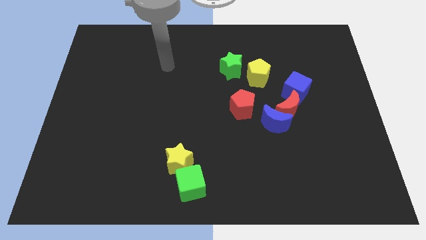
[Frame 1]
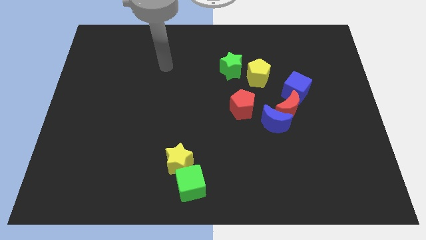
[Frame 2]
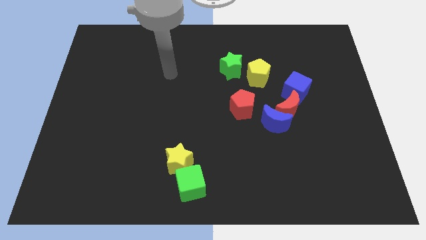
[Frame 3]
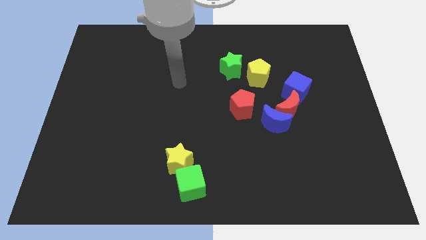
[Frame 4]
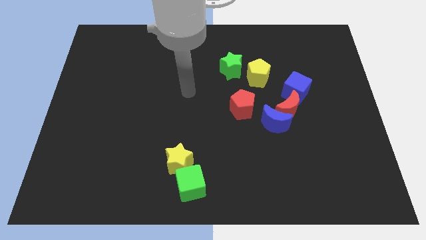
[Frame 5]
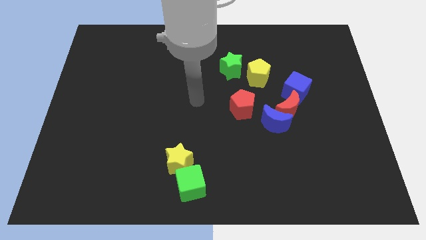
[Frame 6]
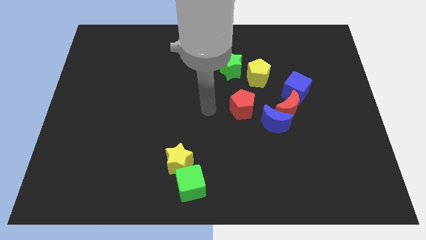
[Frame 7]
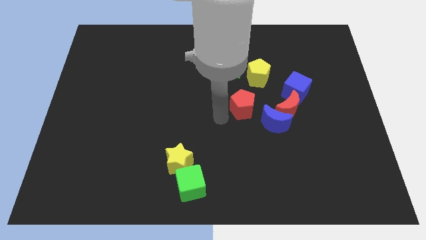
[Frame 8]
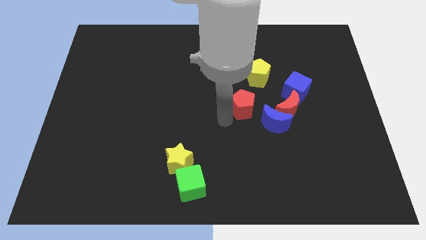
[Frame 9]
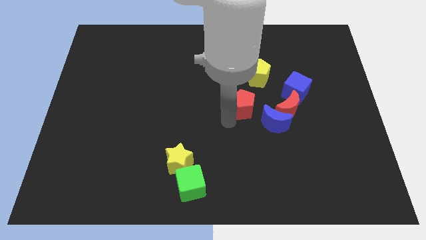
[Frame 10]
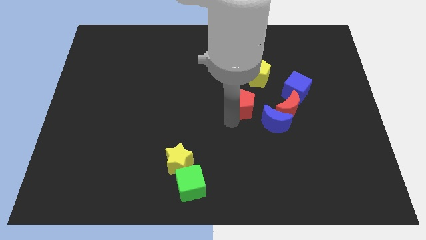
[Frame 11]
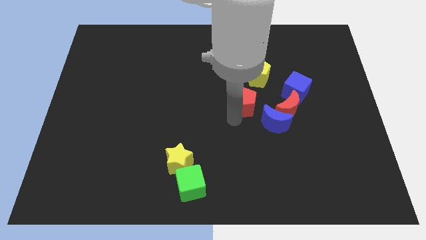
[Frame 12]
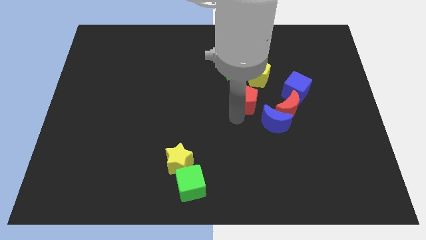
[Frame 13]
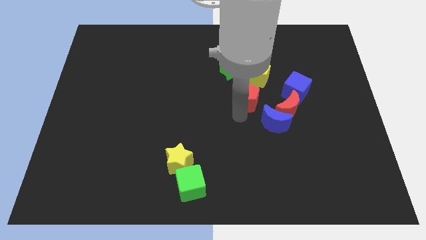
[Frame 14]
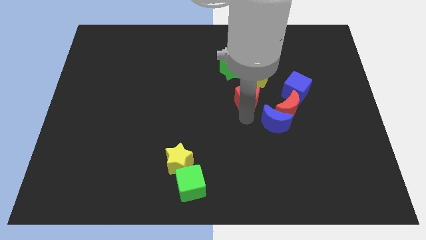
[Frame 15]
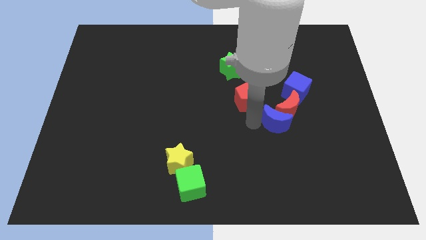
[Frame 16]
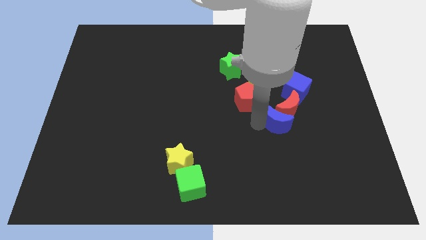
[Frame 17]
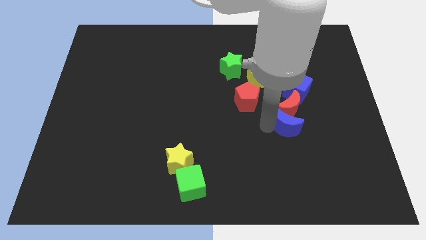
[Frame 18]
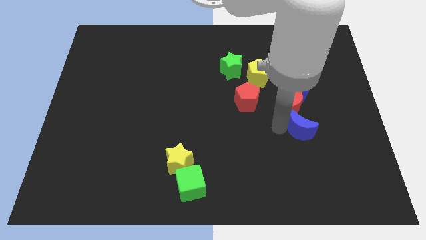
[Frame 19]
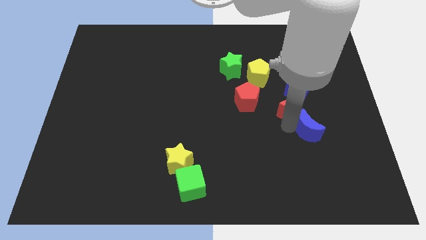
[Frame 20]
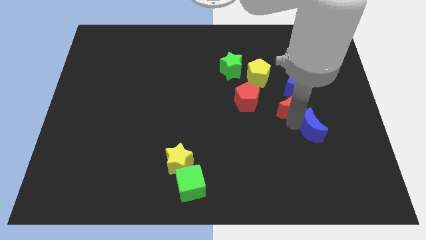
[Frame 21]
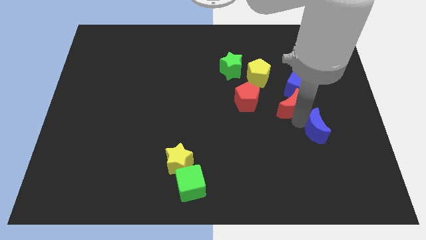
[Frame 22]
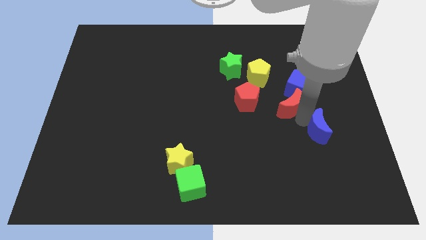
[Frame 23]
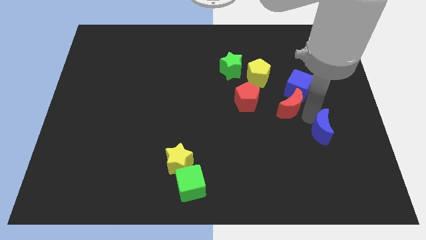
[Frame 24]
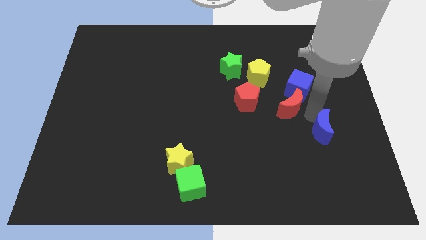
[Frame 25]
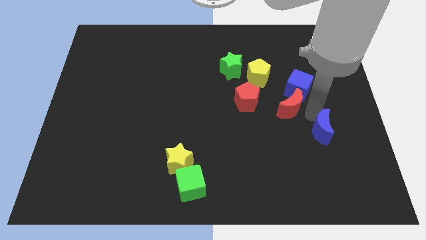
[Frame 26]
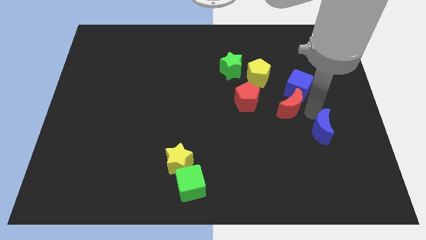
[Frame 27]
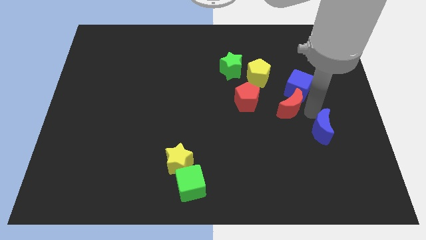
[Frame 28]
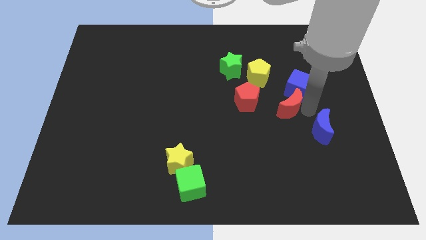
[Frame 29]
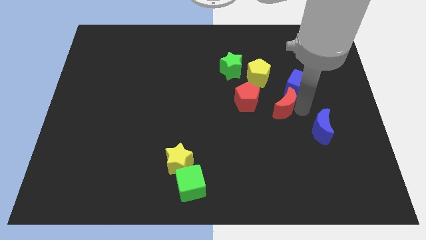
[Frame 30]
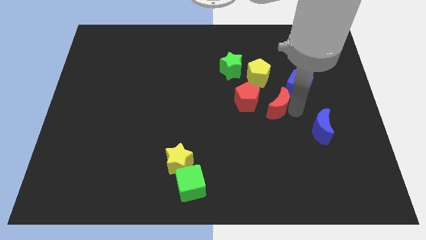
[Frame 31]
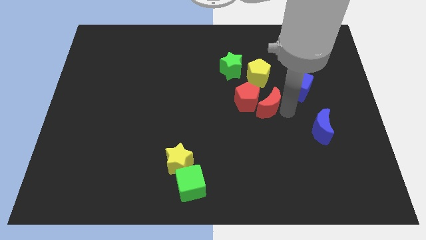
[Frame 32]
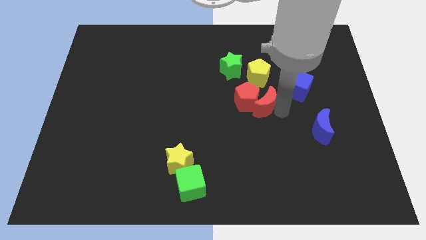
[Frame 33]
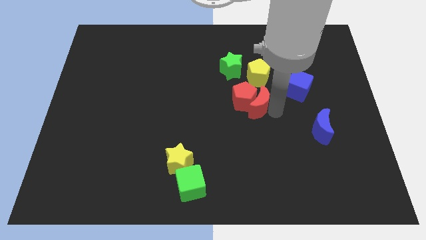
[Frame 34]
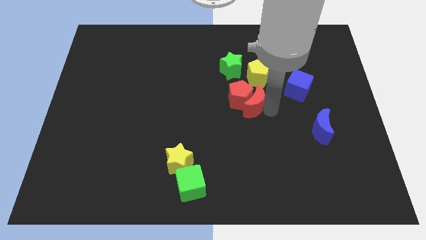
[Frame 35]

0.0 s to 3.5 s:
separate the red moon and blue moon

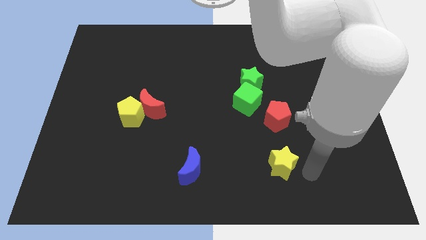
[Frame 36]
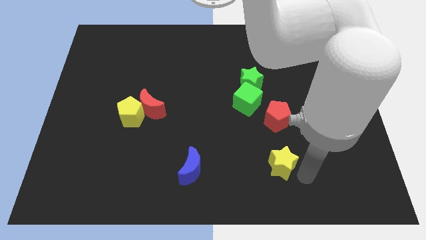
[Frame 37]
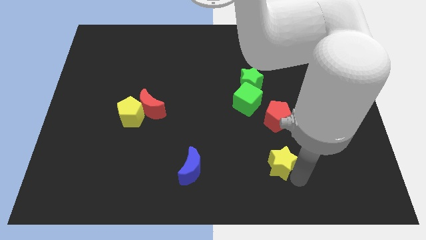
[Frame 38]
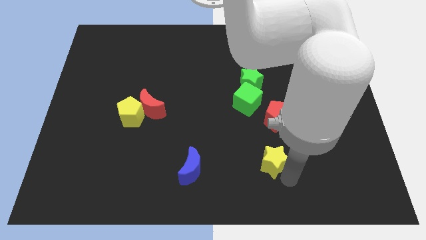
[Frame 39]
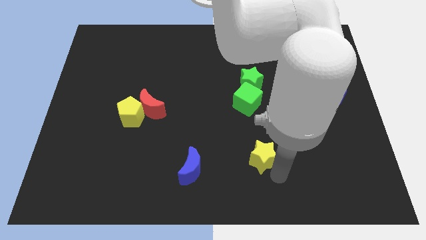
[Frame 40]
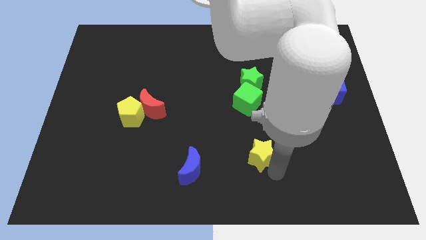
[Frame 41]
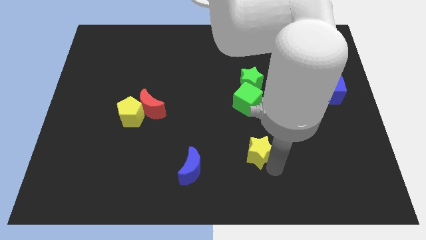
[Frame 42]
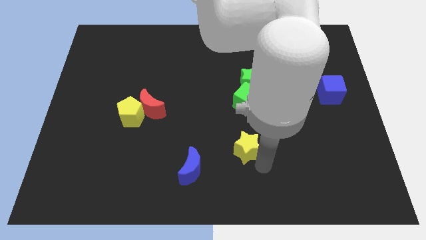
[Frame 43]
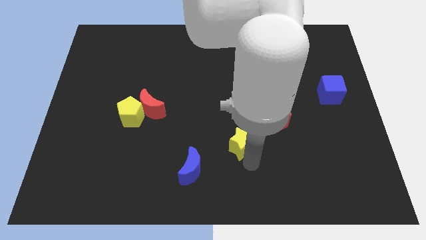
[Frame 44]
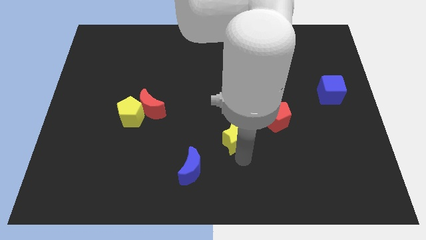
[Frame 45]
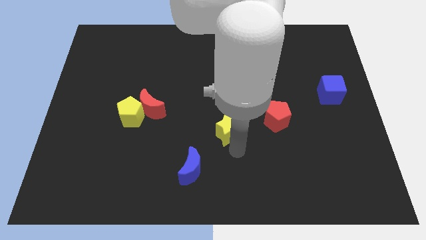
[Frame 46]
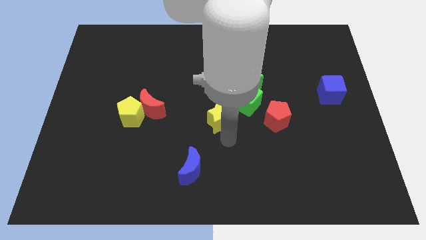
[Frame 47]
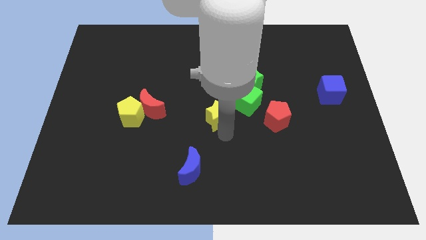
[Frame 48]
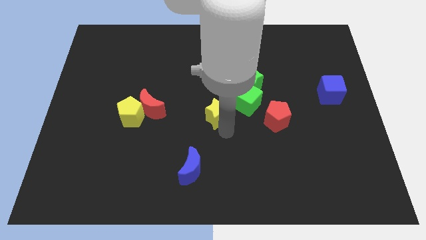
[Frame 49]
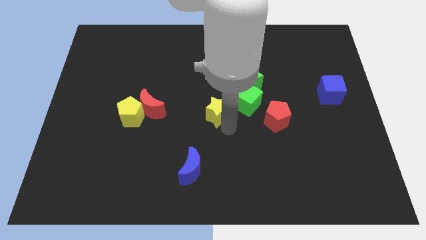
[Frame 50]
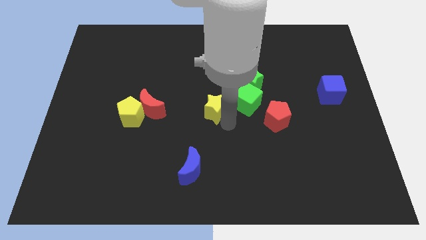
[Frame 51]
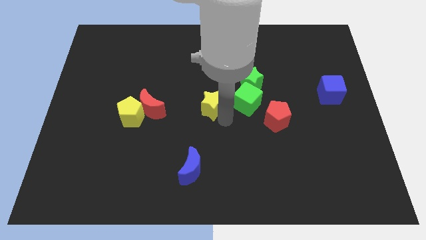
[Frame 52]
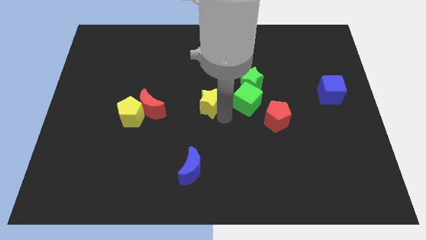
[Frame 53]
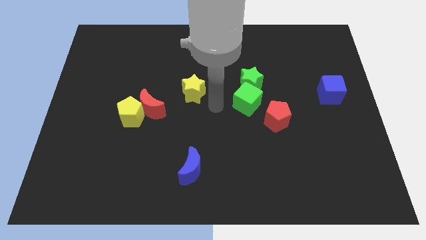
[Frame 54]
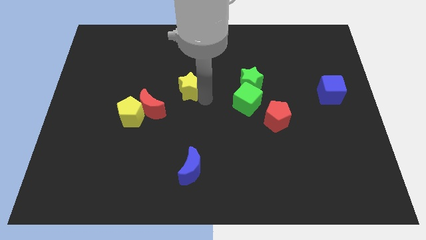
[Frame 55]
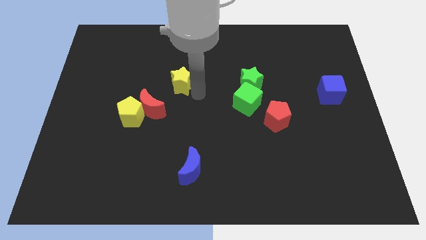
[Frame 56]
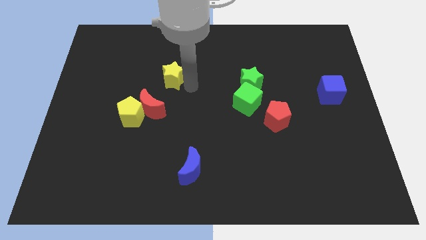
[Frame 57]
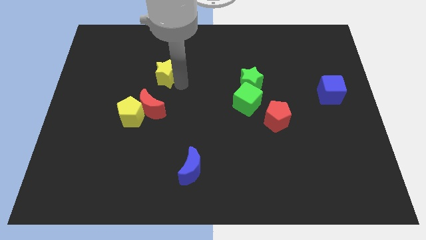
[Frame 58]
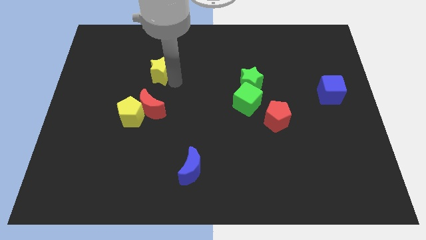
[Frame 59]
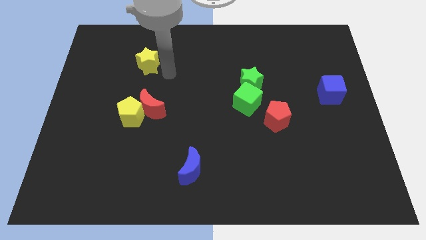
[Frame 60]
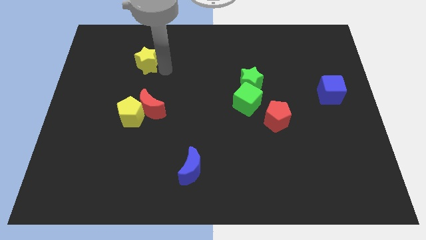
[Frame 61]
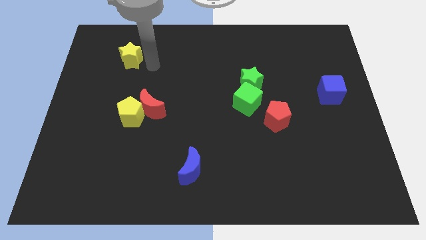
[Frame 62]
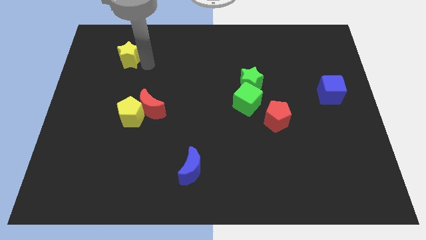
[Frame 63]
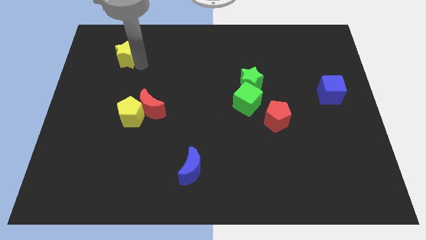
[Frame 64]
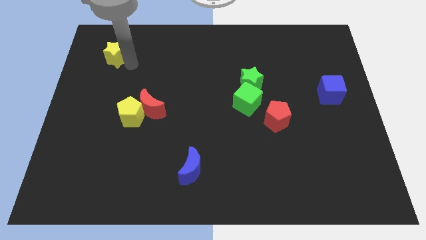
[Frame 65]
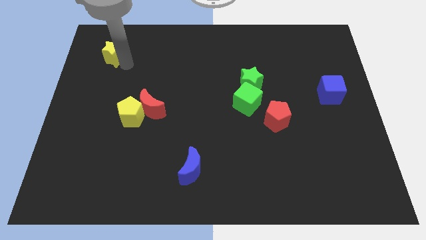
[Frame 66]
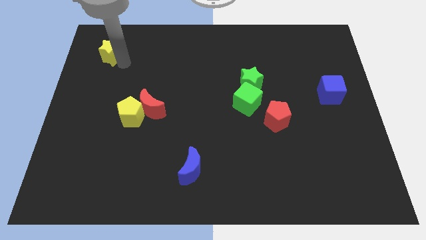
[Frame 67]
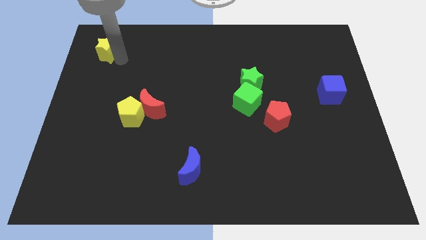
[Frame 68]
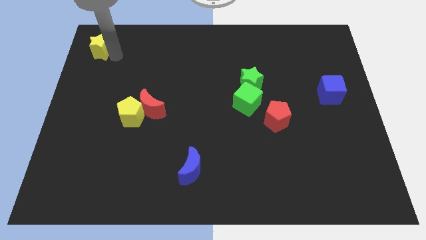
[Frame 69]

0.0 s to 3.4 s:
move the yellow star to the top left of the board

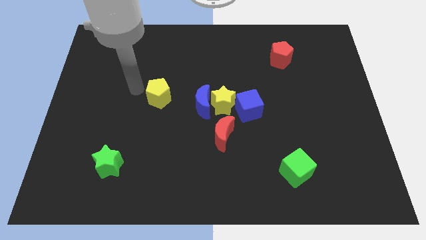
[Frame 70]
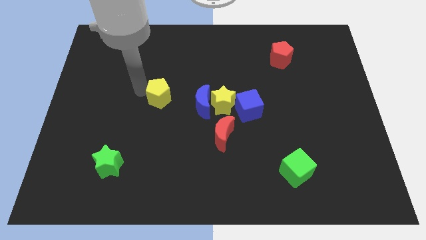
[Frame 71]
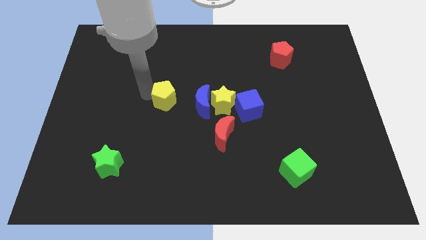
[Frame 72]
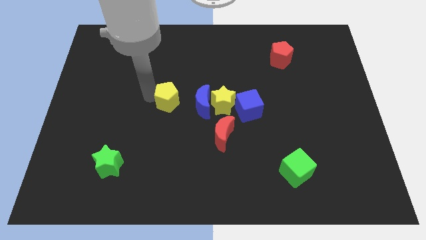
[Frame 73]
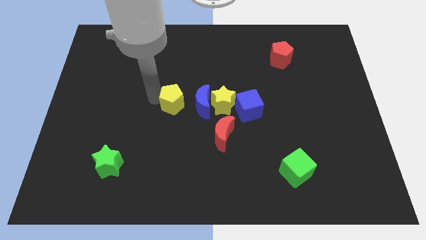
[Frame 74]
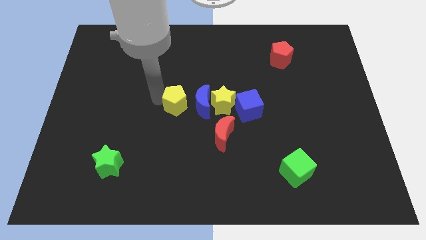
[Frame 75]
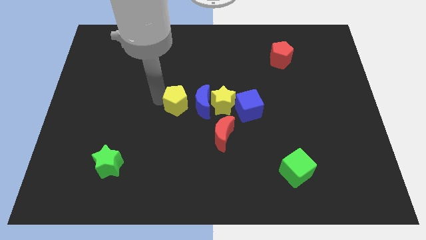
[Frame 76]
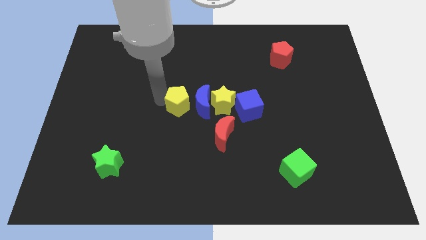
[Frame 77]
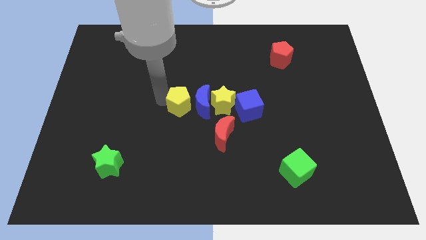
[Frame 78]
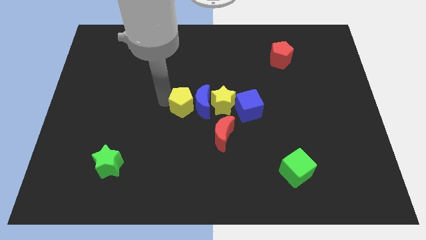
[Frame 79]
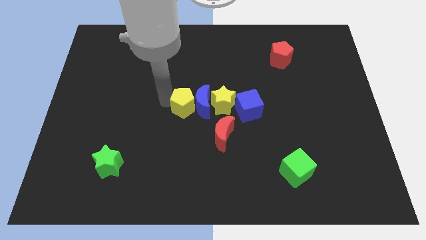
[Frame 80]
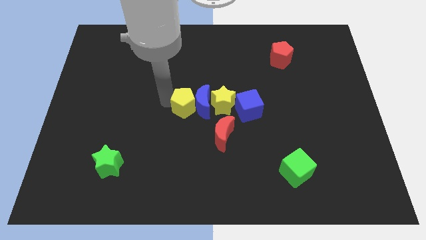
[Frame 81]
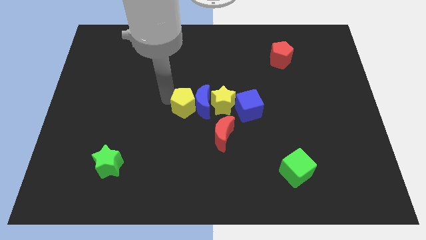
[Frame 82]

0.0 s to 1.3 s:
make the yellow pentagon to touch the blue crescent

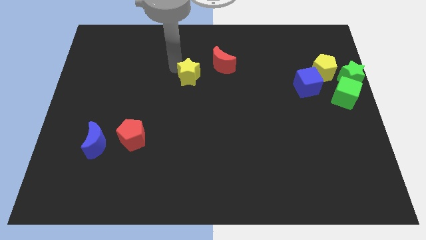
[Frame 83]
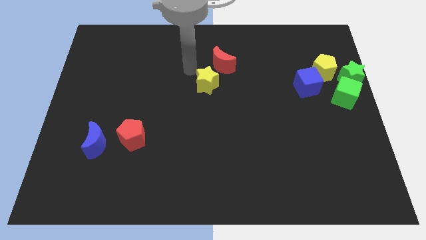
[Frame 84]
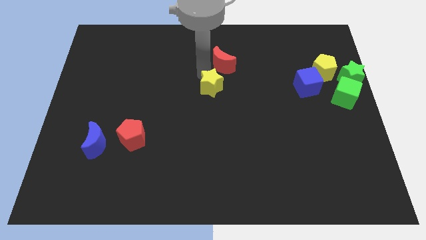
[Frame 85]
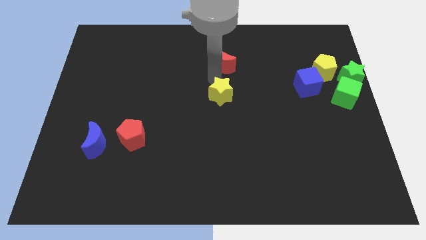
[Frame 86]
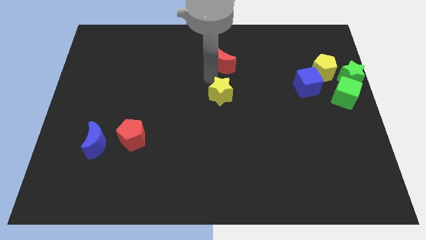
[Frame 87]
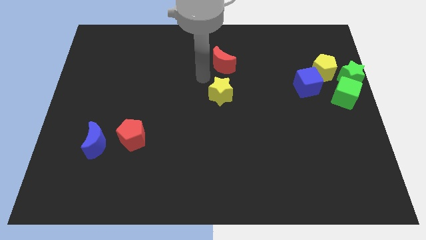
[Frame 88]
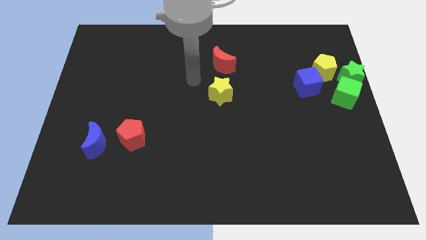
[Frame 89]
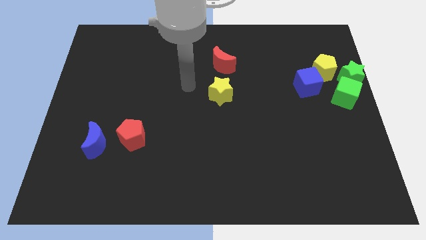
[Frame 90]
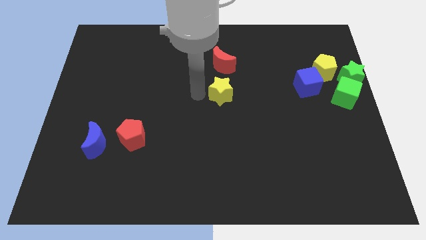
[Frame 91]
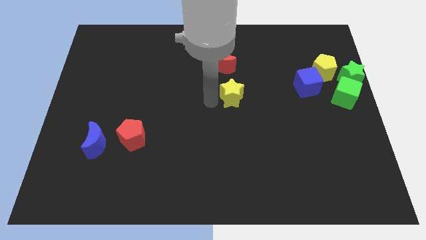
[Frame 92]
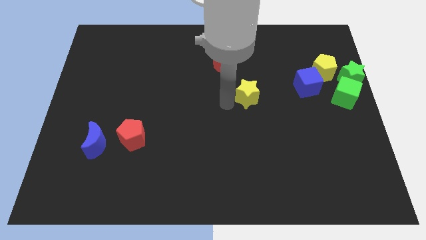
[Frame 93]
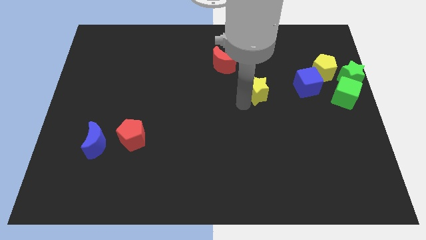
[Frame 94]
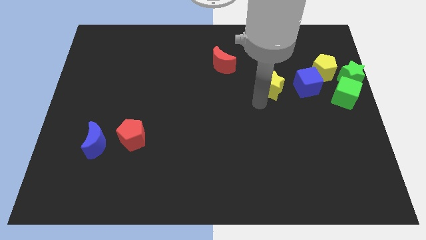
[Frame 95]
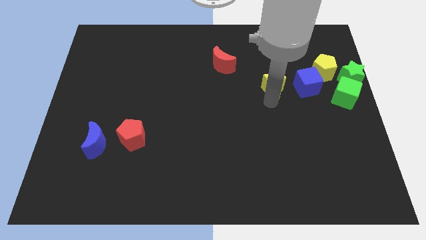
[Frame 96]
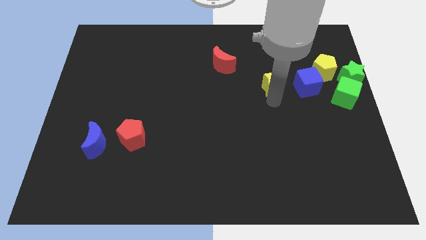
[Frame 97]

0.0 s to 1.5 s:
place the yellow star left to the blue cube
